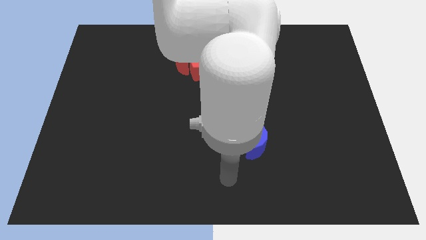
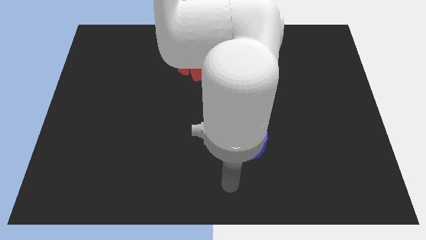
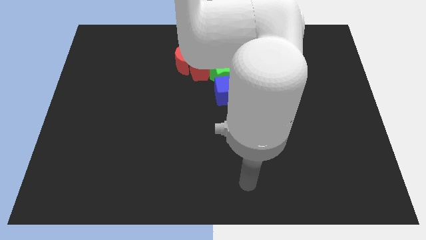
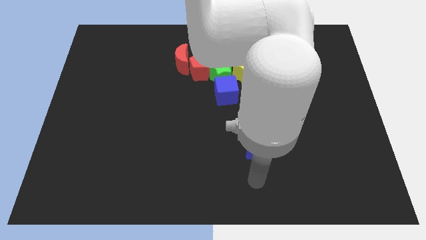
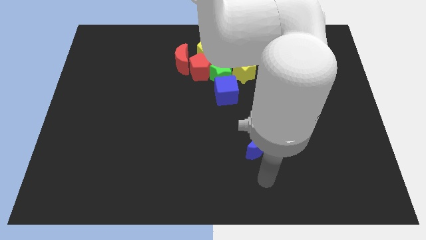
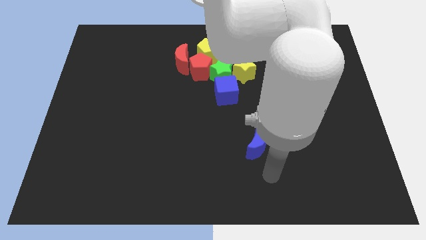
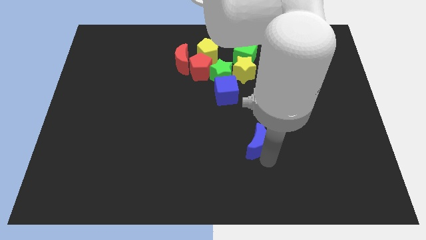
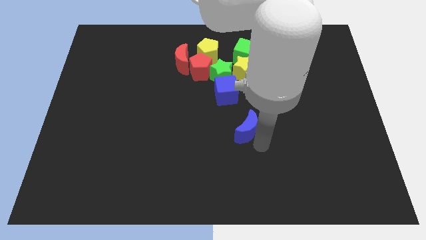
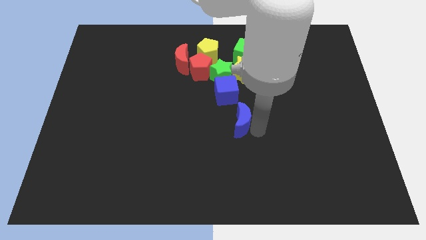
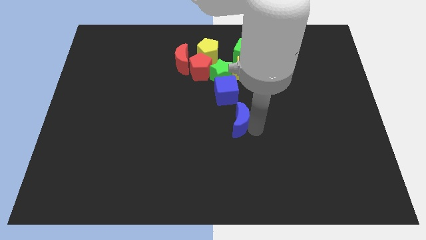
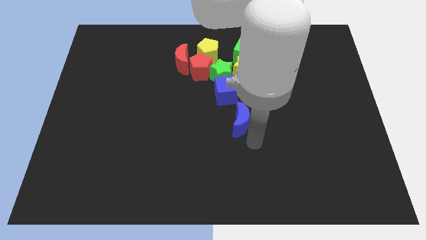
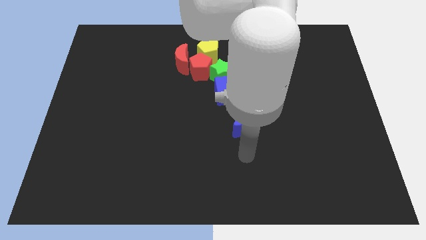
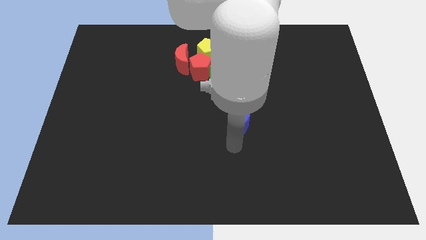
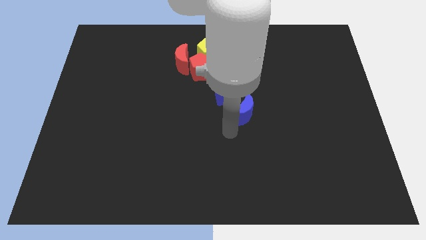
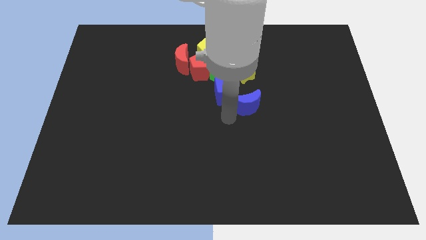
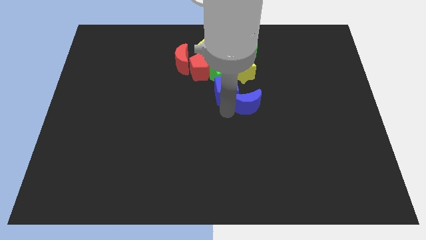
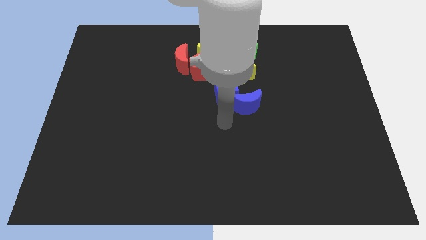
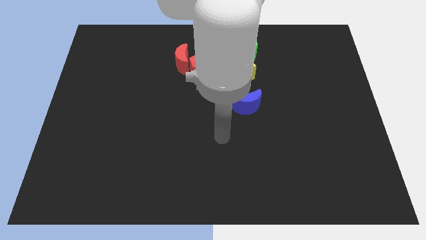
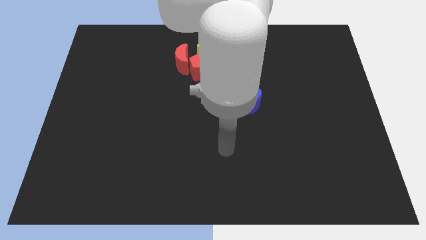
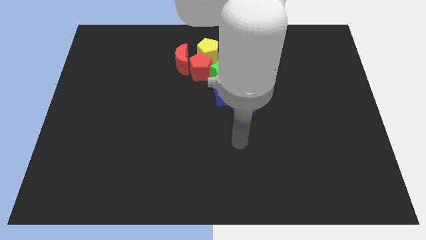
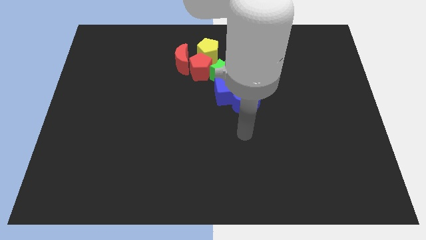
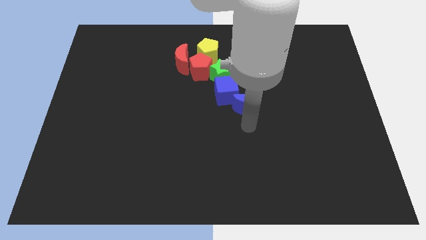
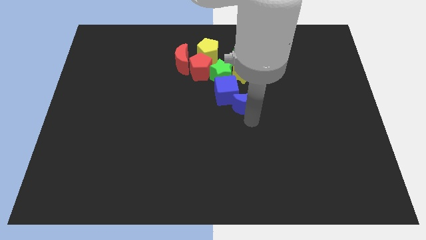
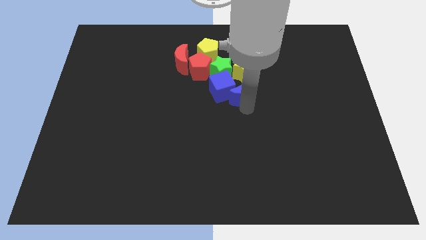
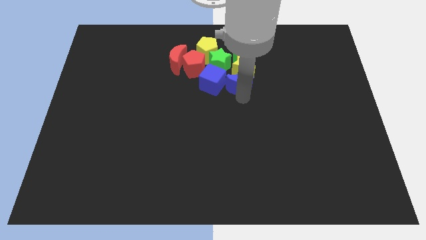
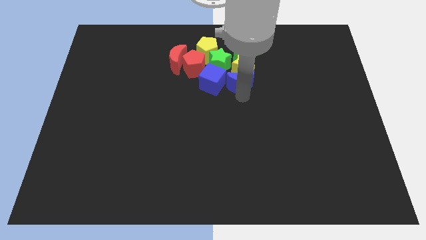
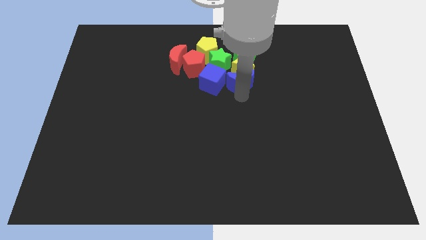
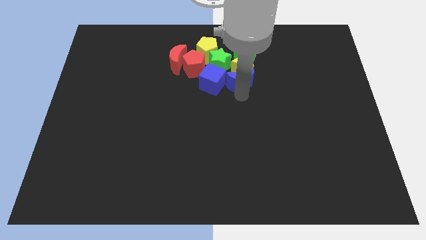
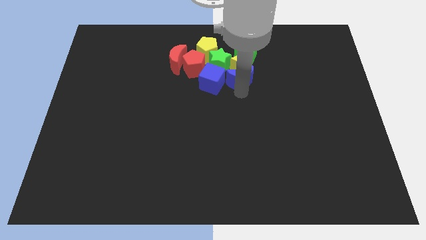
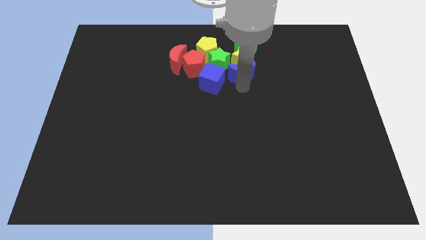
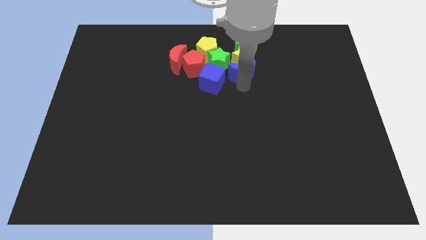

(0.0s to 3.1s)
move blue moon below yellow star

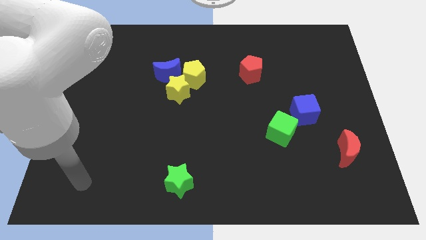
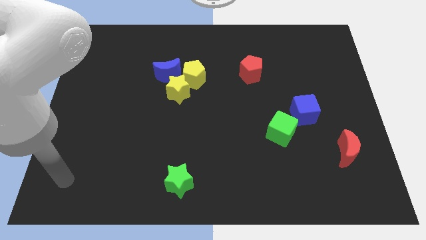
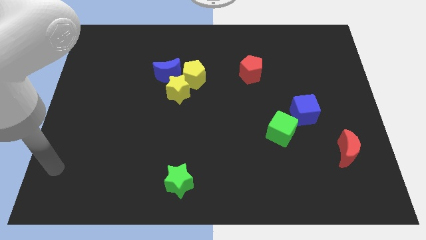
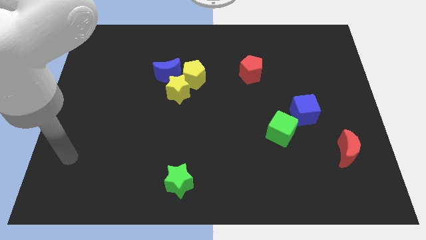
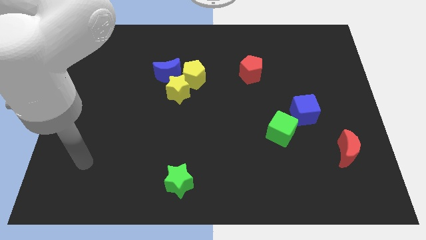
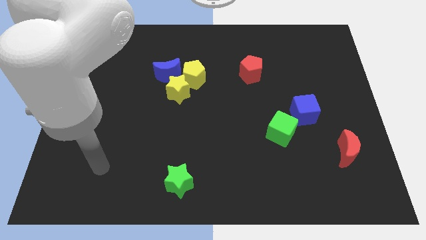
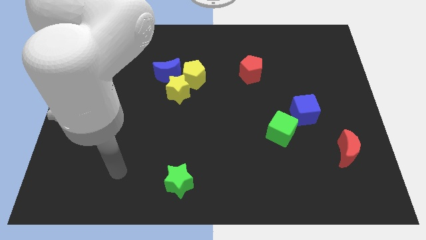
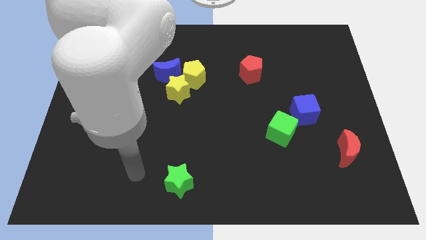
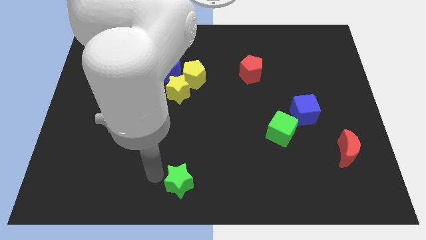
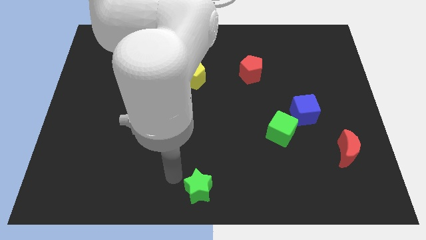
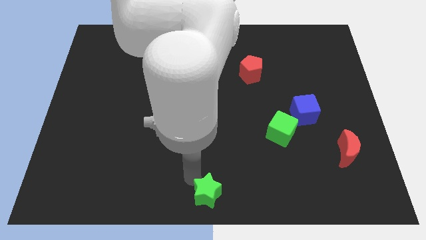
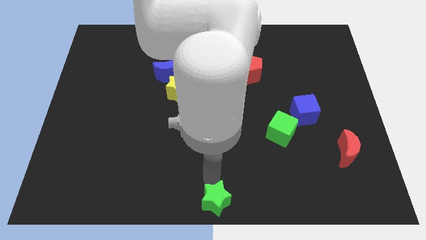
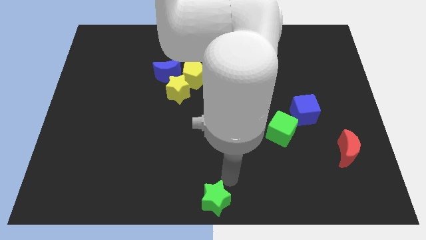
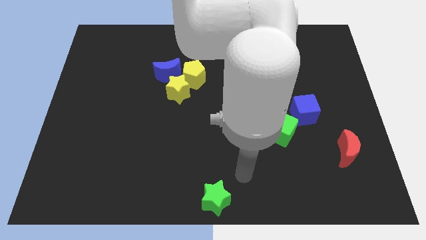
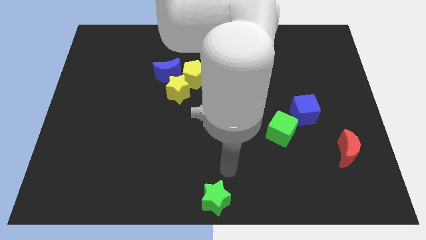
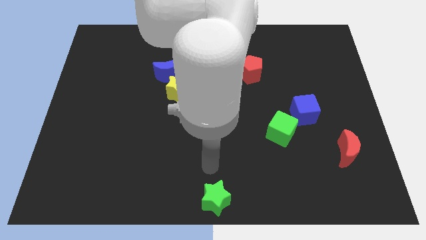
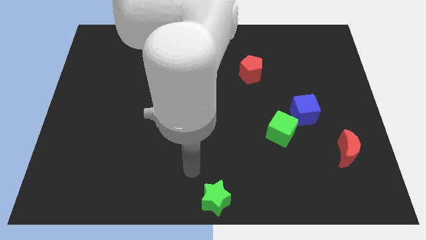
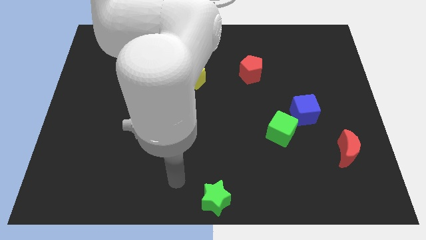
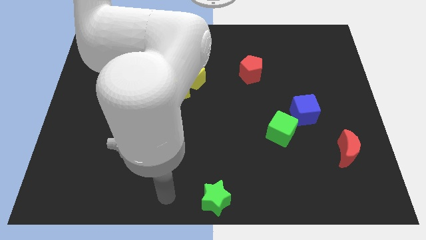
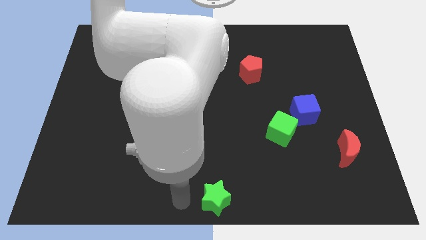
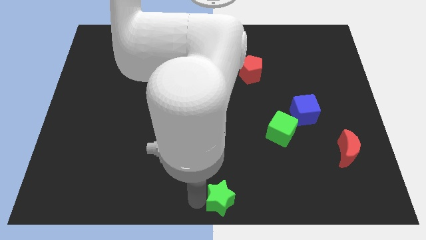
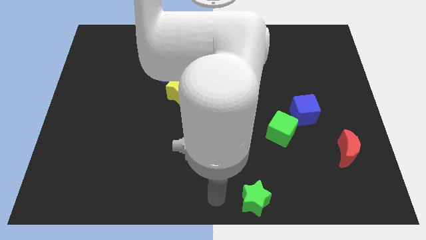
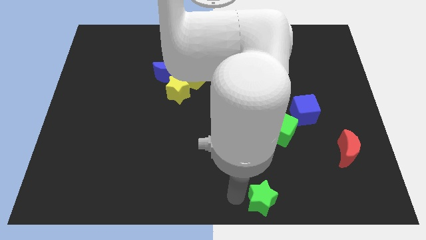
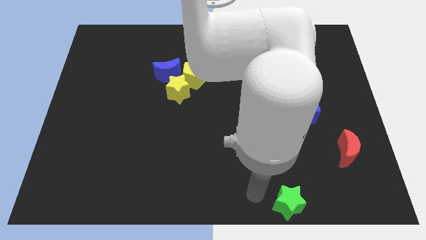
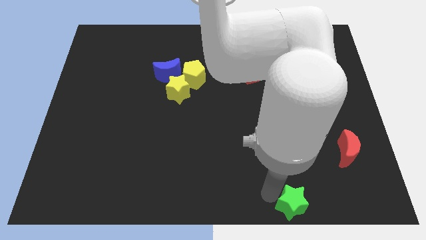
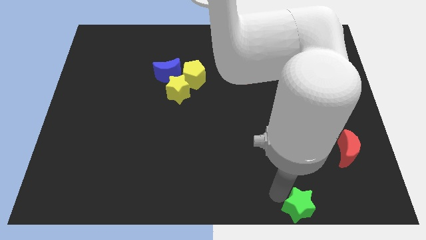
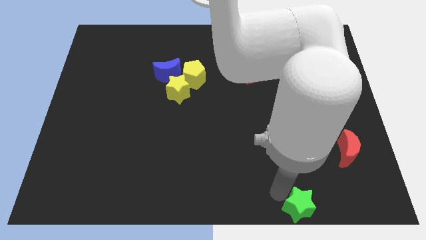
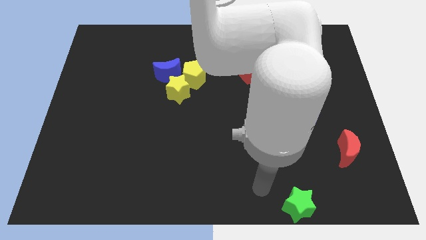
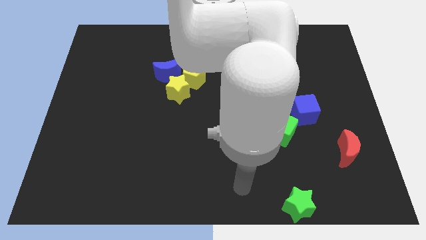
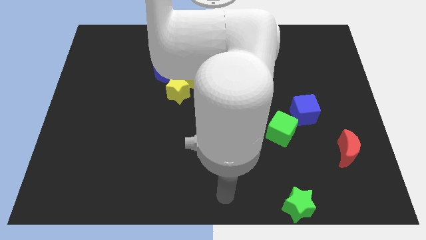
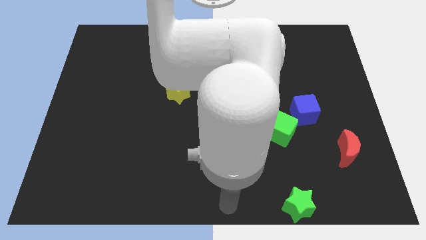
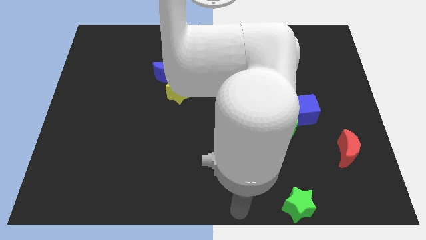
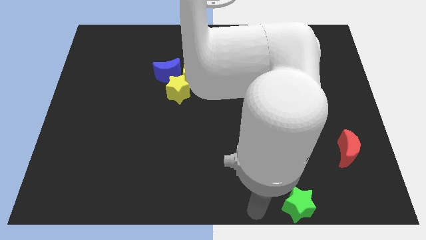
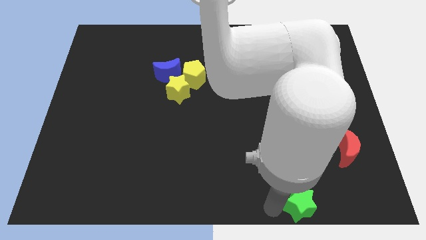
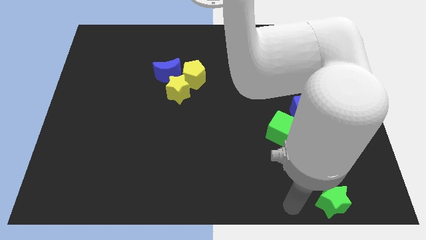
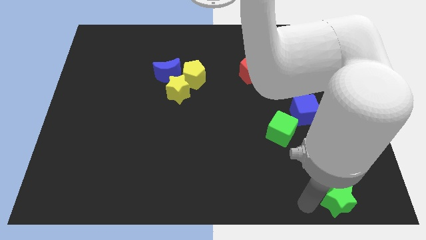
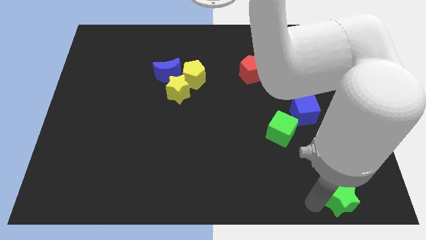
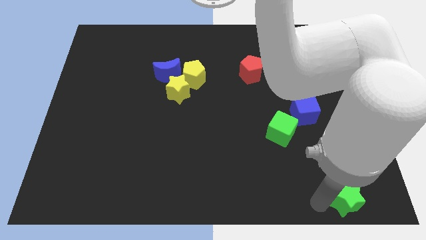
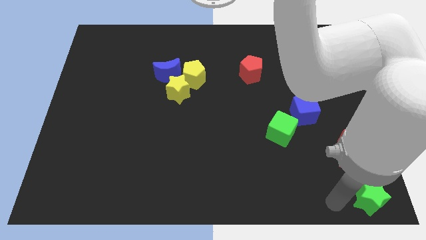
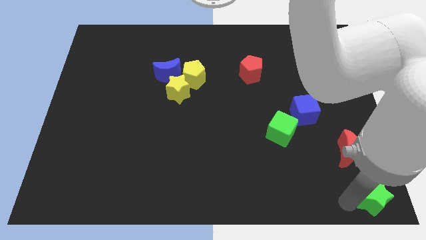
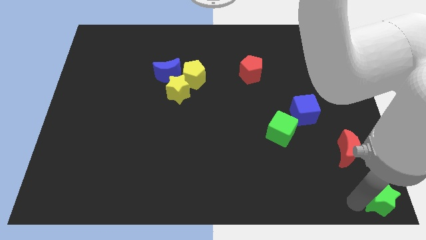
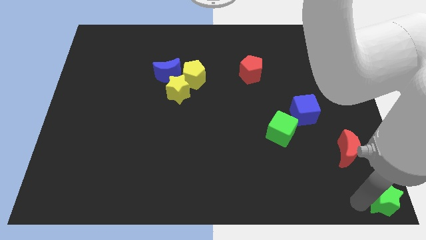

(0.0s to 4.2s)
push the green star to the bottom right corner of the board

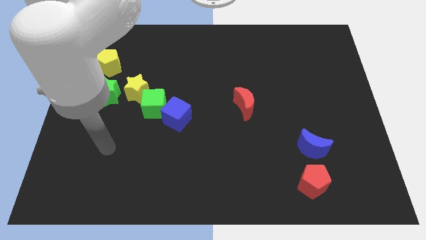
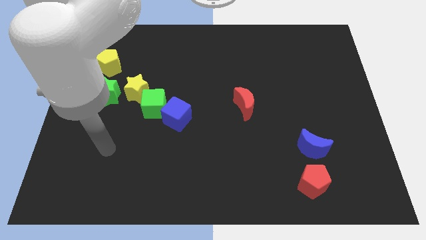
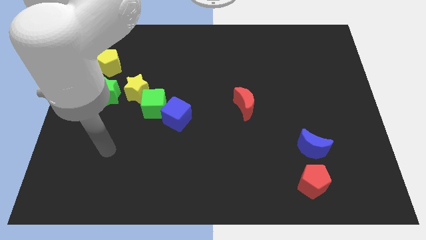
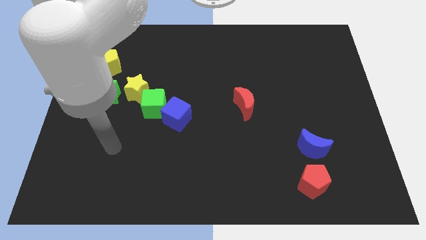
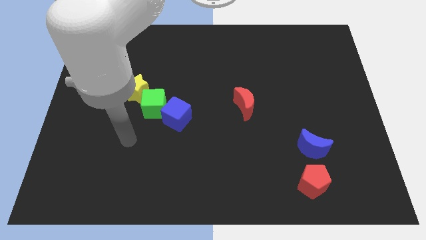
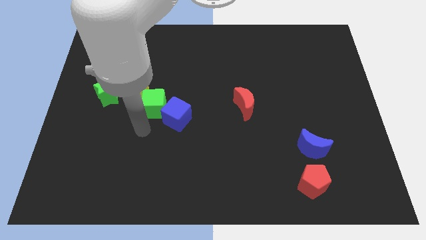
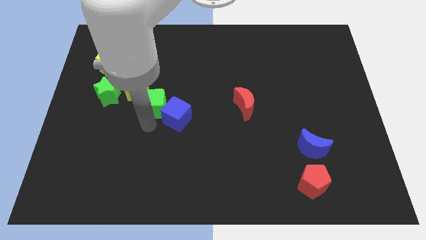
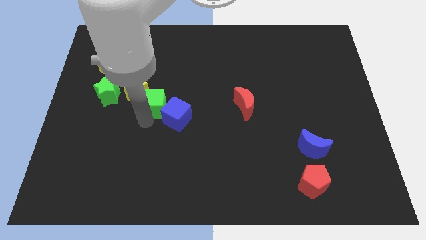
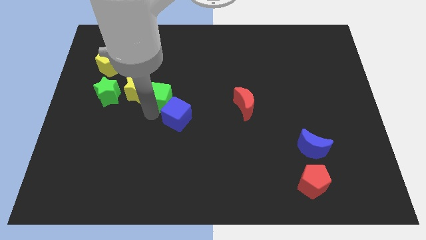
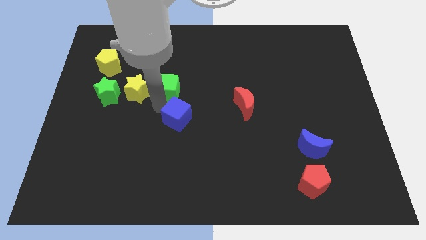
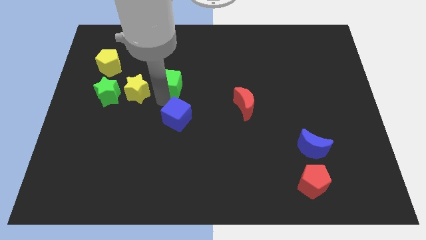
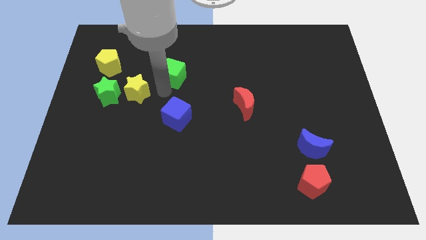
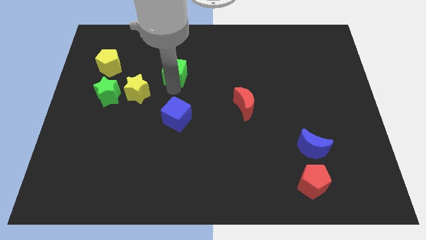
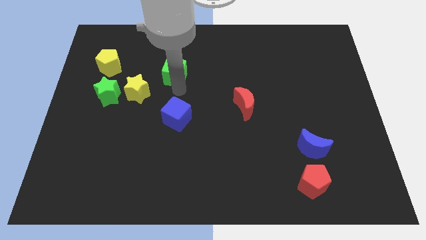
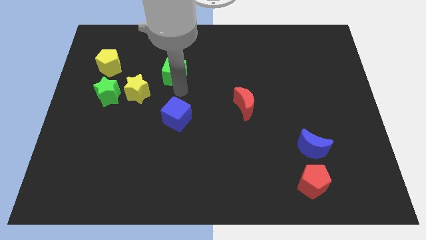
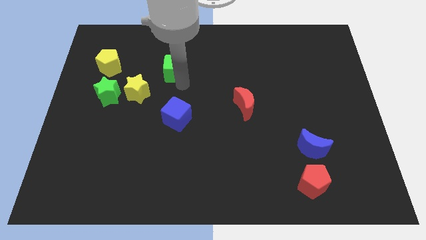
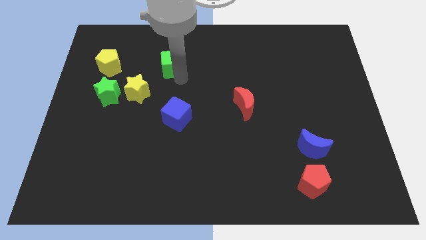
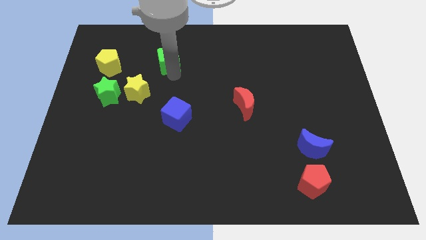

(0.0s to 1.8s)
move the green cube diagonally to the yellow star
